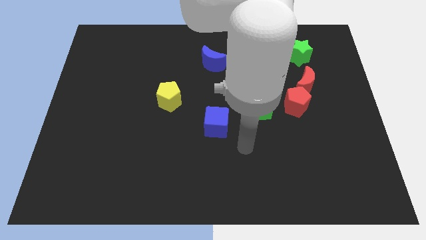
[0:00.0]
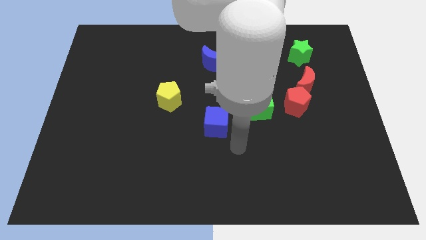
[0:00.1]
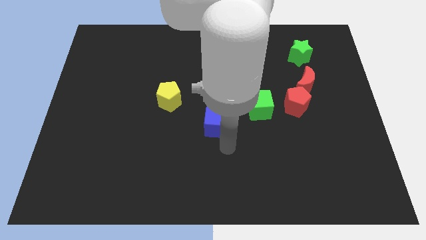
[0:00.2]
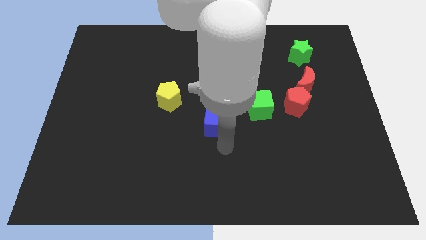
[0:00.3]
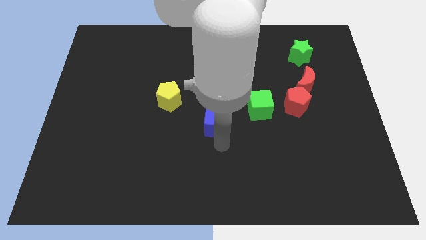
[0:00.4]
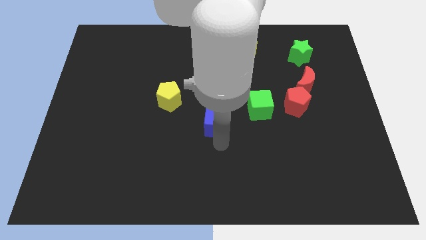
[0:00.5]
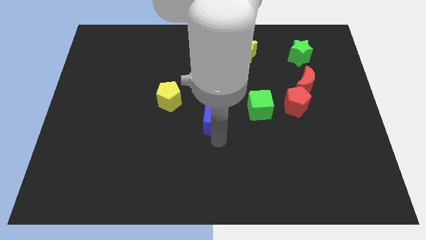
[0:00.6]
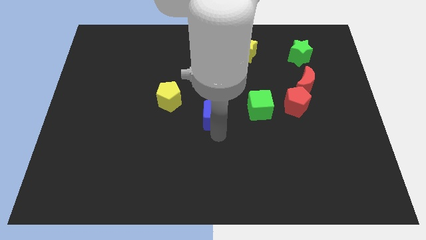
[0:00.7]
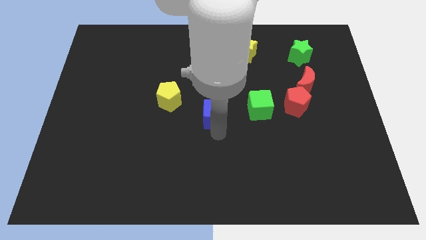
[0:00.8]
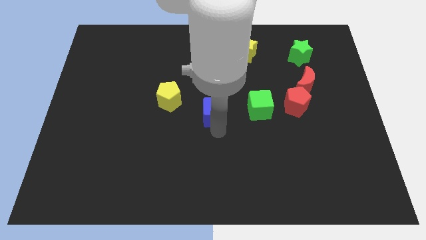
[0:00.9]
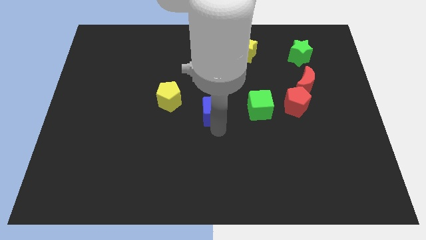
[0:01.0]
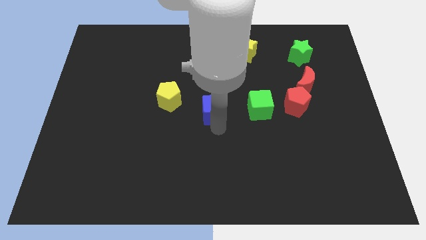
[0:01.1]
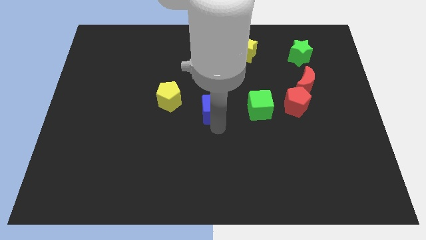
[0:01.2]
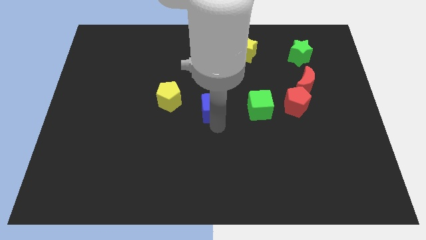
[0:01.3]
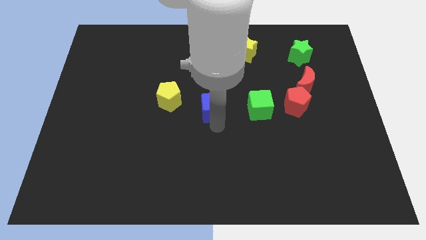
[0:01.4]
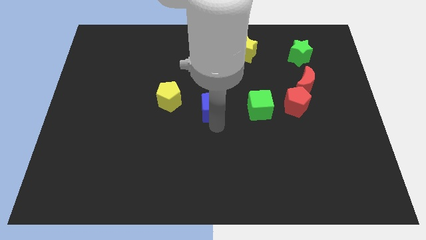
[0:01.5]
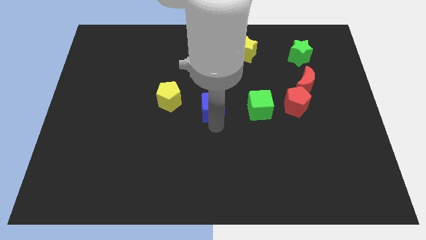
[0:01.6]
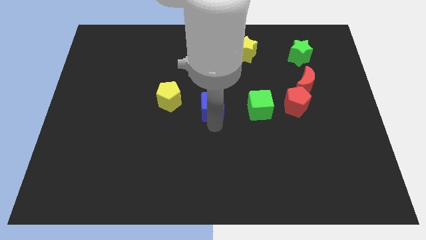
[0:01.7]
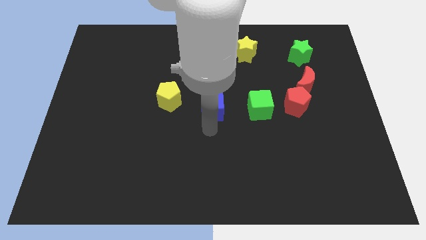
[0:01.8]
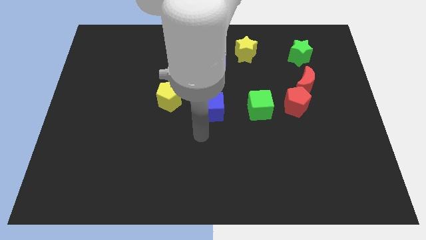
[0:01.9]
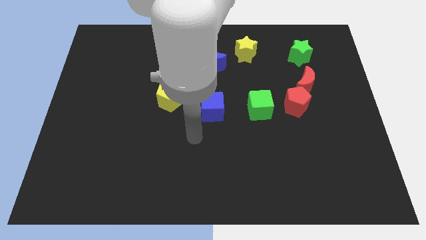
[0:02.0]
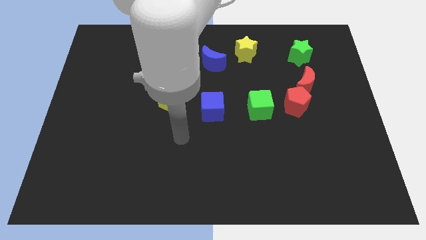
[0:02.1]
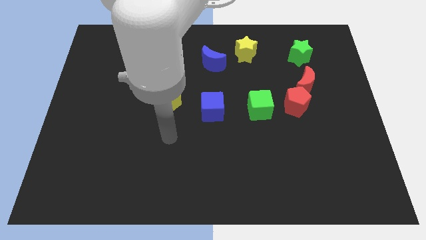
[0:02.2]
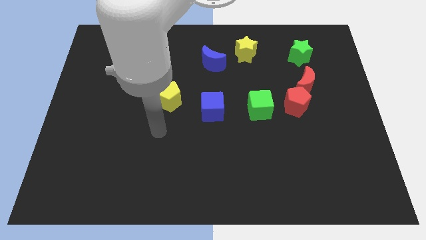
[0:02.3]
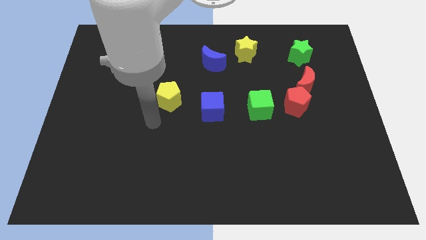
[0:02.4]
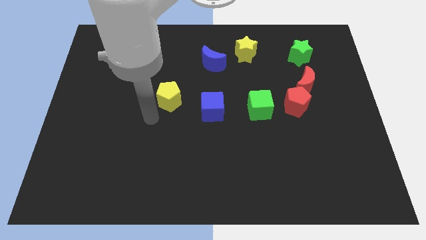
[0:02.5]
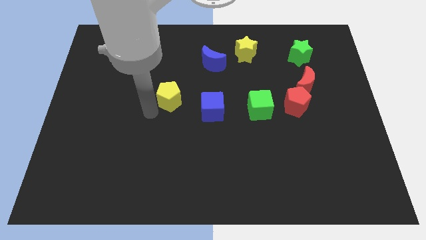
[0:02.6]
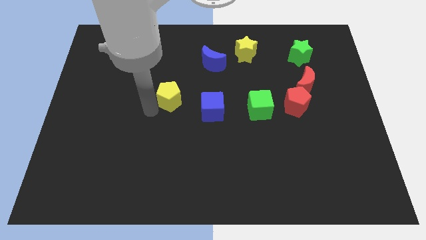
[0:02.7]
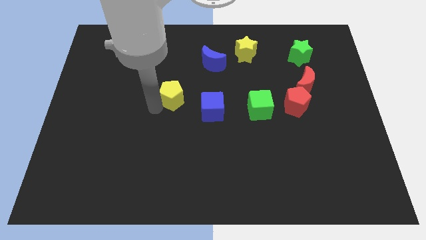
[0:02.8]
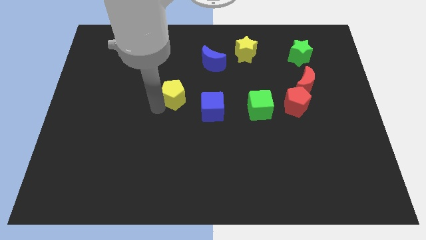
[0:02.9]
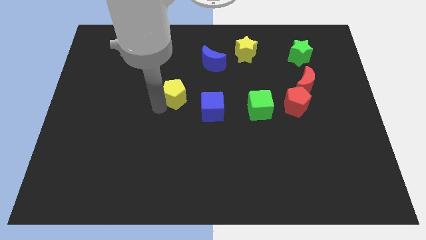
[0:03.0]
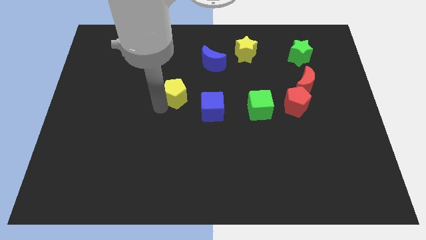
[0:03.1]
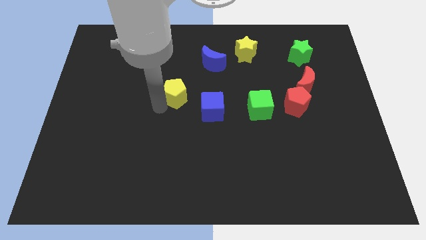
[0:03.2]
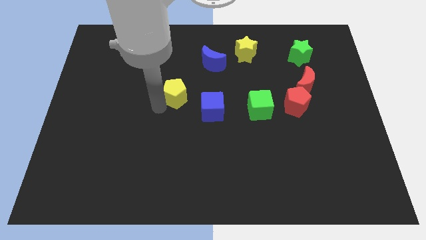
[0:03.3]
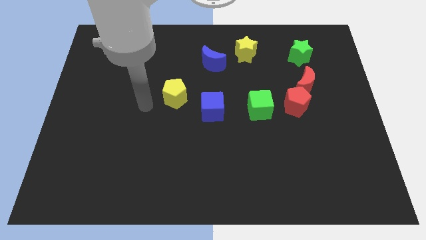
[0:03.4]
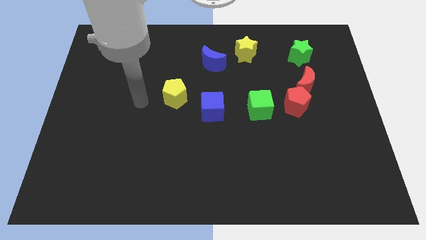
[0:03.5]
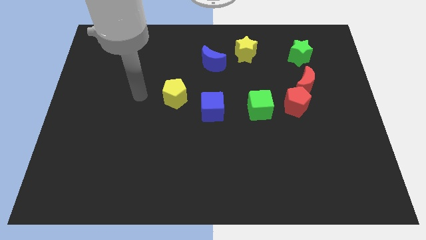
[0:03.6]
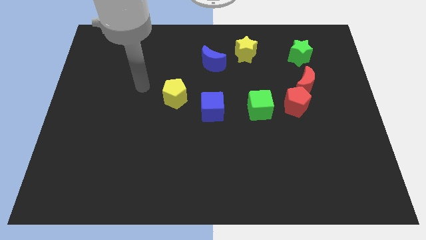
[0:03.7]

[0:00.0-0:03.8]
place the blue cube left to green cube

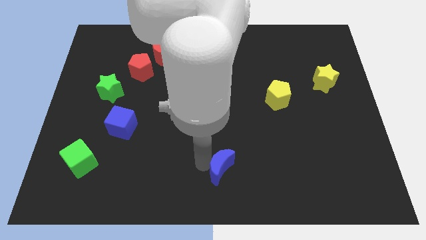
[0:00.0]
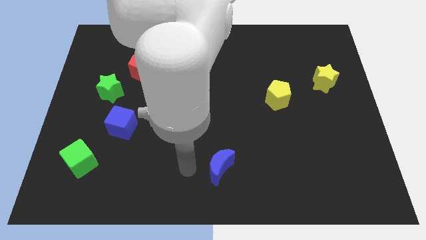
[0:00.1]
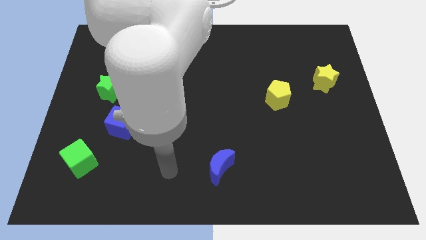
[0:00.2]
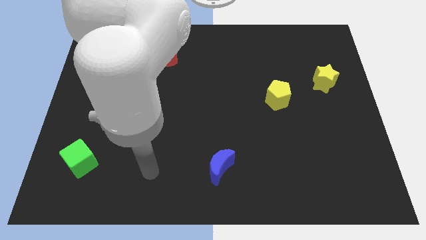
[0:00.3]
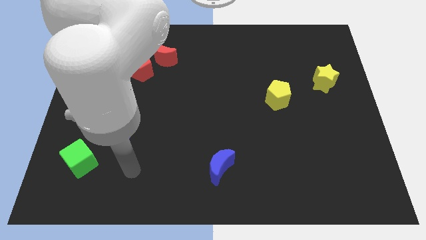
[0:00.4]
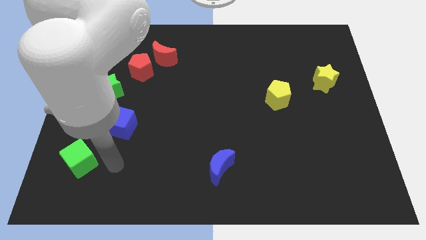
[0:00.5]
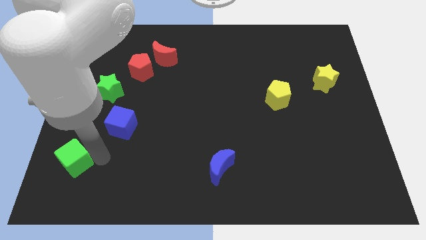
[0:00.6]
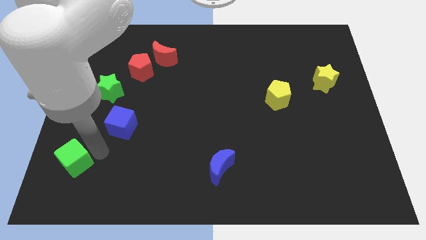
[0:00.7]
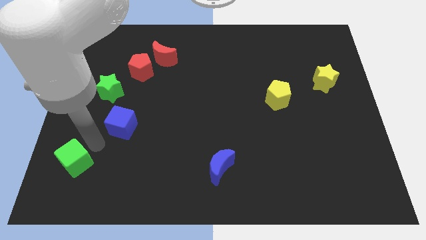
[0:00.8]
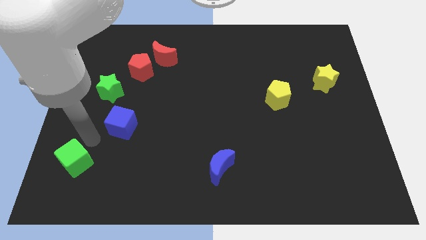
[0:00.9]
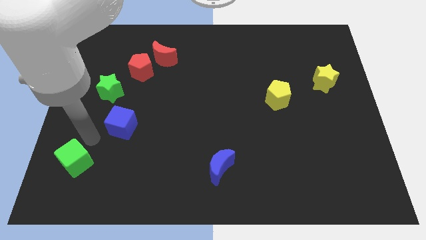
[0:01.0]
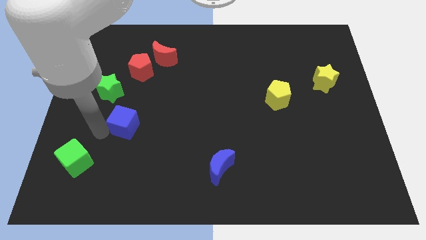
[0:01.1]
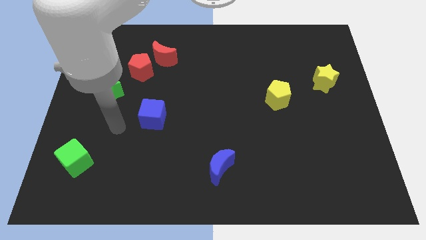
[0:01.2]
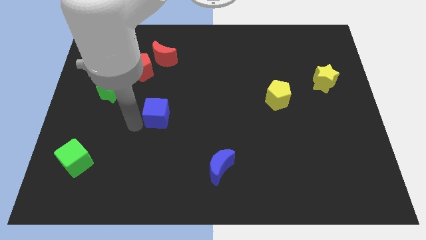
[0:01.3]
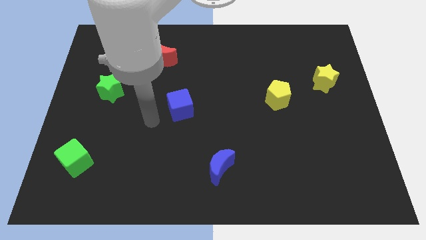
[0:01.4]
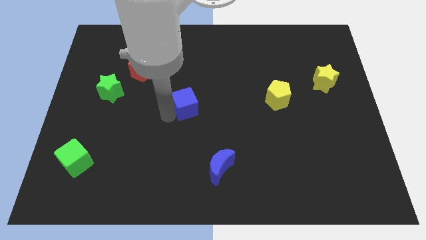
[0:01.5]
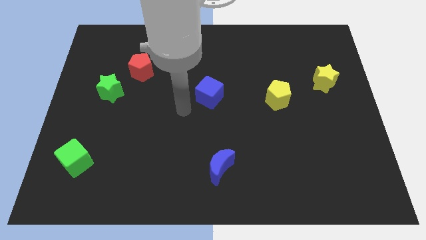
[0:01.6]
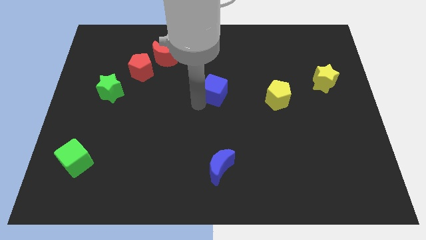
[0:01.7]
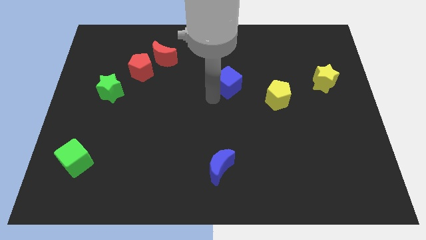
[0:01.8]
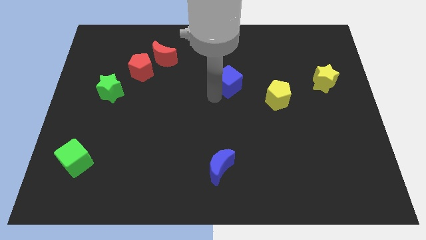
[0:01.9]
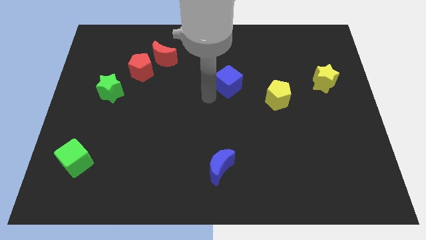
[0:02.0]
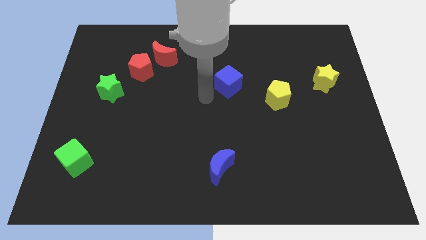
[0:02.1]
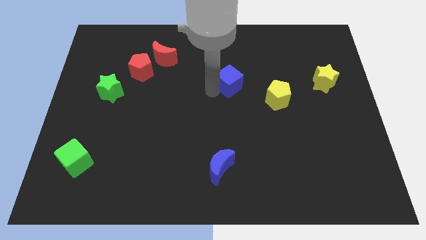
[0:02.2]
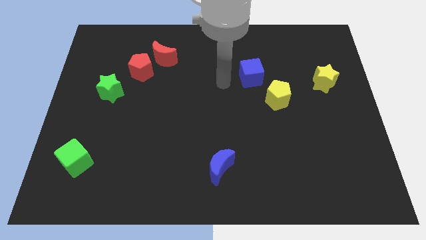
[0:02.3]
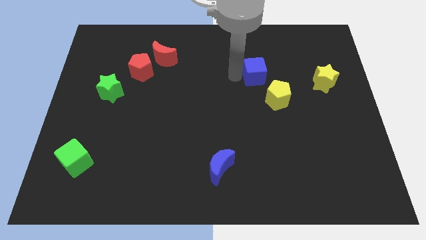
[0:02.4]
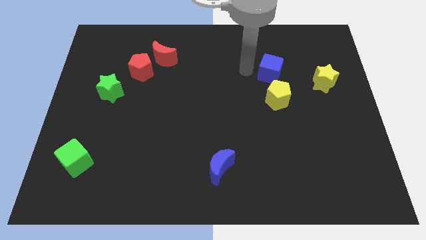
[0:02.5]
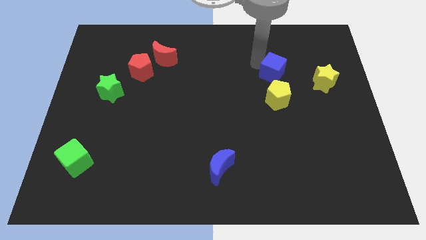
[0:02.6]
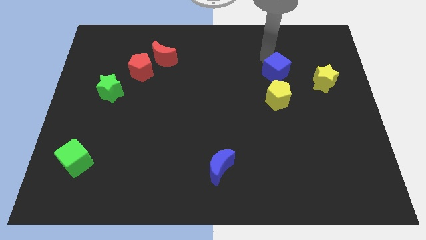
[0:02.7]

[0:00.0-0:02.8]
place blue cube above yellow pentagon

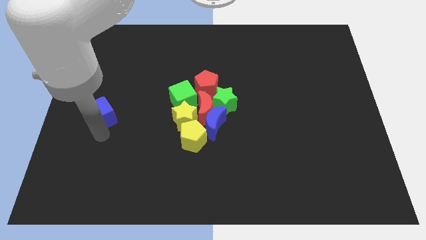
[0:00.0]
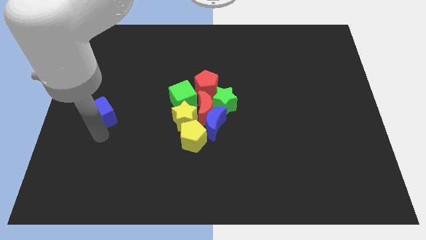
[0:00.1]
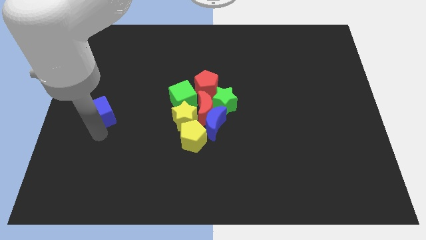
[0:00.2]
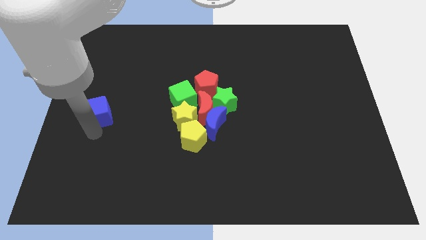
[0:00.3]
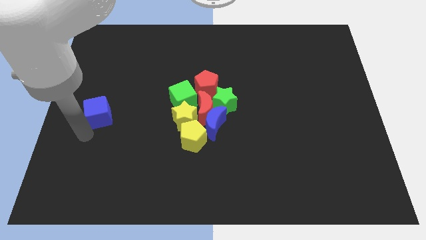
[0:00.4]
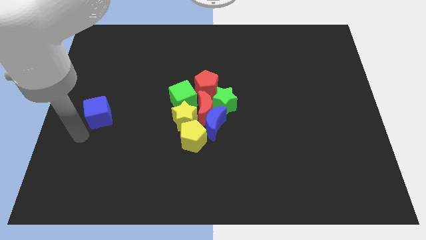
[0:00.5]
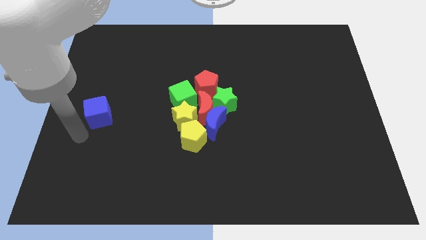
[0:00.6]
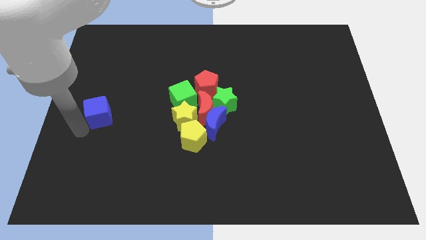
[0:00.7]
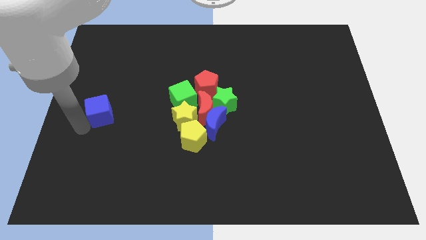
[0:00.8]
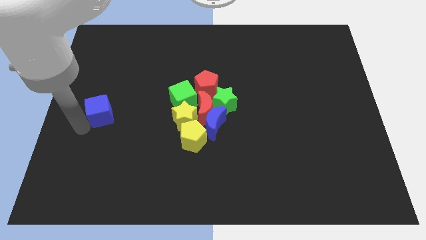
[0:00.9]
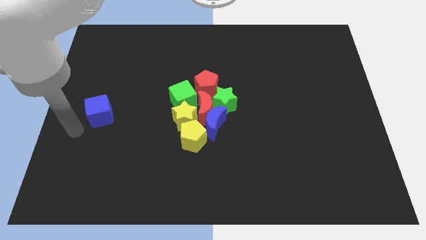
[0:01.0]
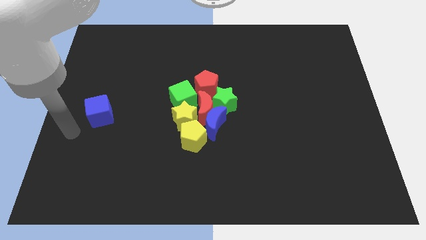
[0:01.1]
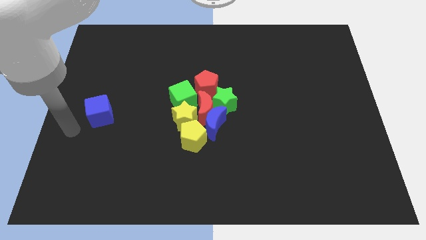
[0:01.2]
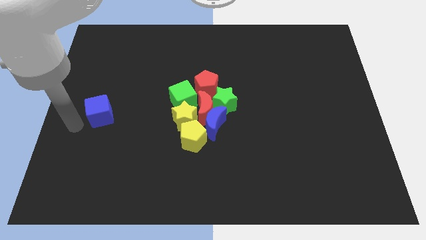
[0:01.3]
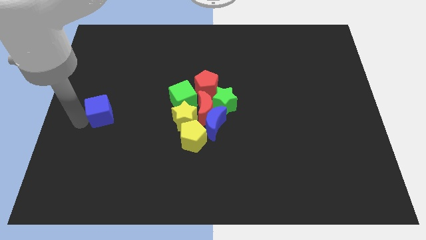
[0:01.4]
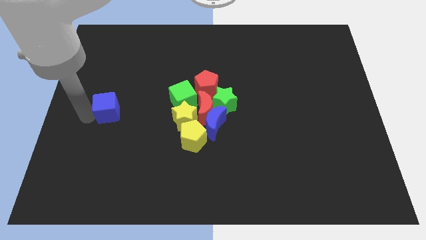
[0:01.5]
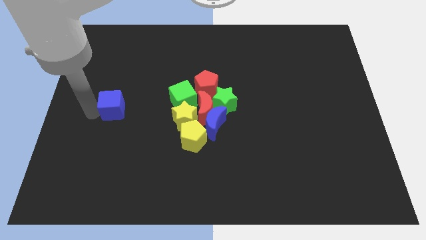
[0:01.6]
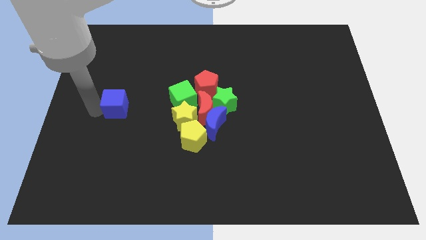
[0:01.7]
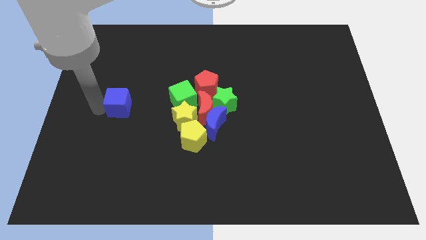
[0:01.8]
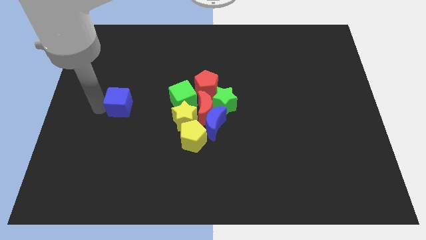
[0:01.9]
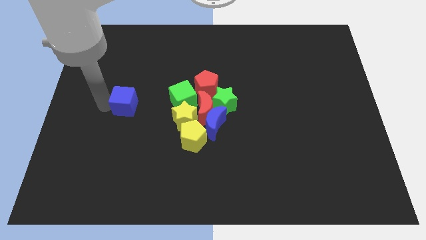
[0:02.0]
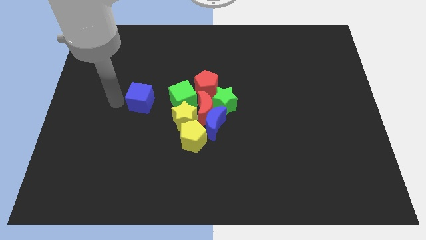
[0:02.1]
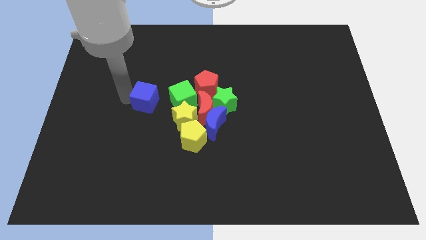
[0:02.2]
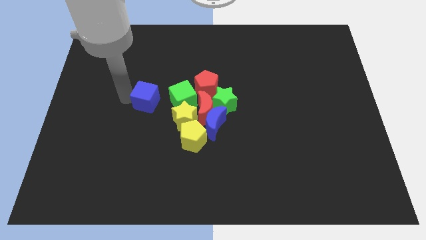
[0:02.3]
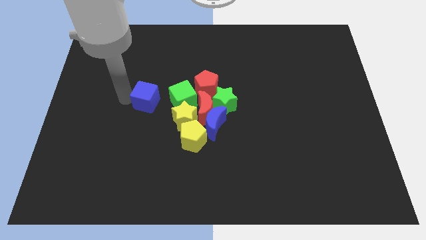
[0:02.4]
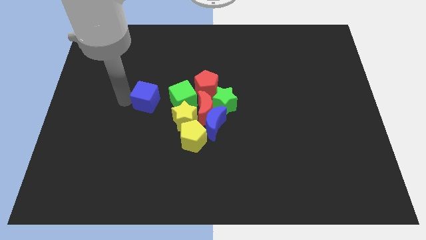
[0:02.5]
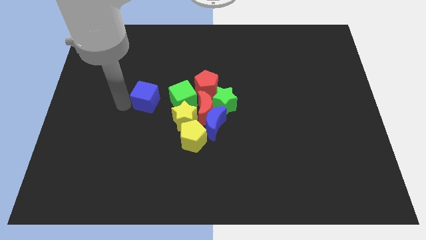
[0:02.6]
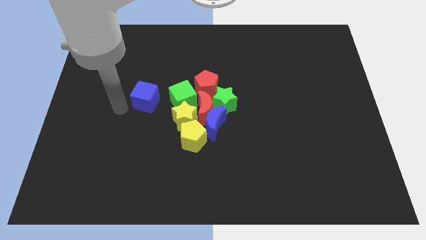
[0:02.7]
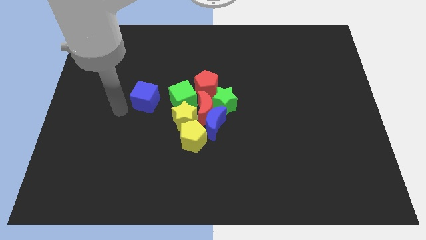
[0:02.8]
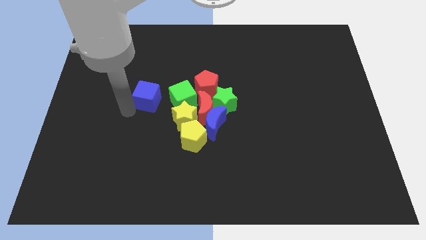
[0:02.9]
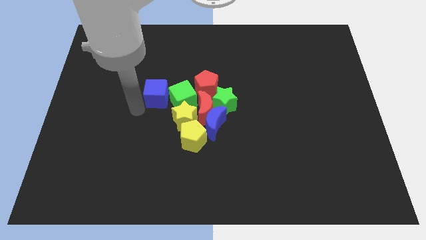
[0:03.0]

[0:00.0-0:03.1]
move the blue cube towards the green cube
